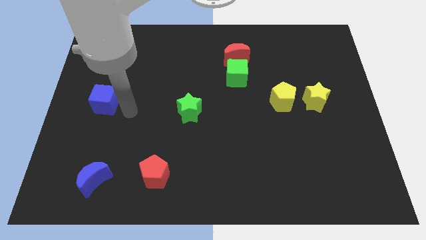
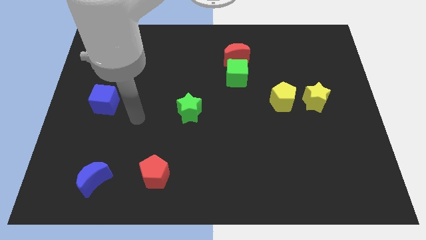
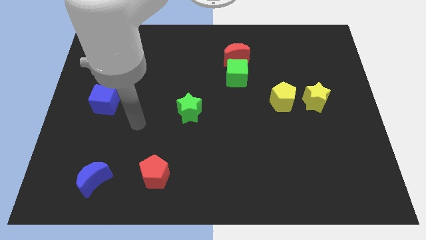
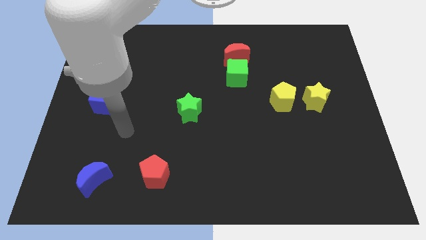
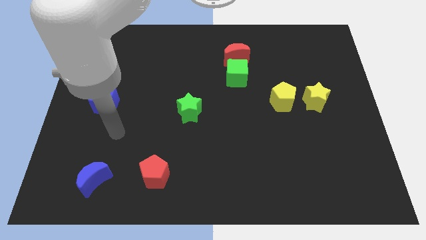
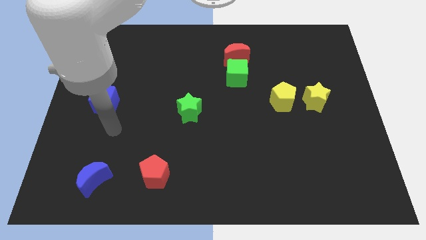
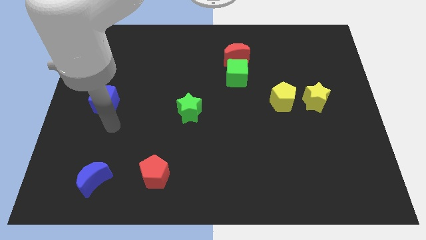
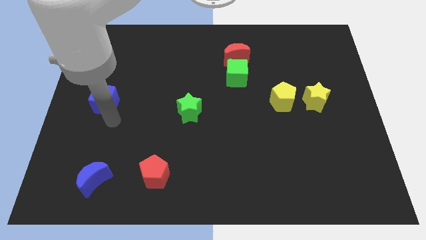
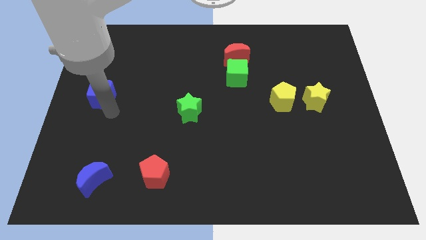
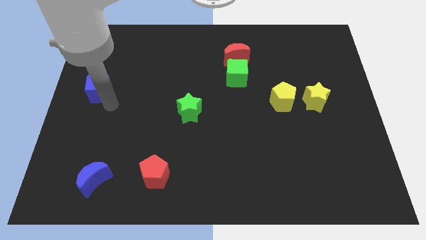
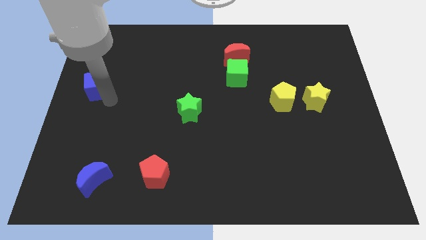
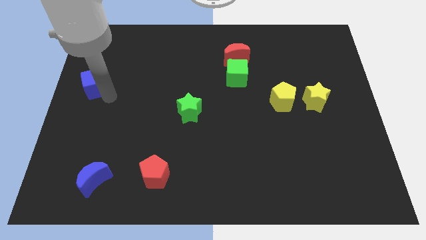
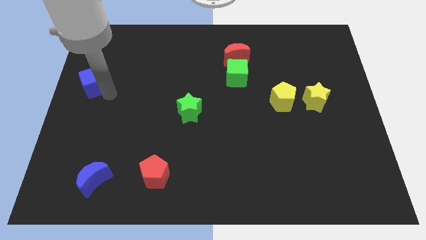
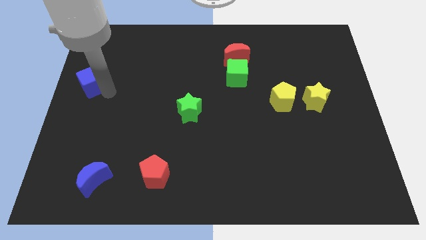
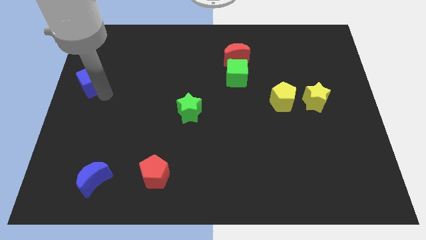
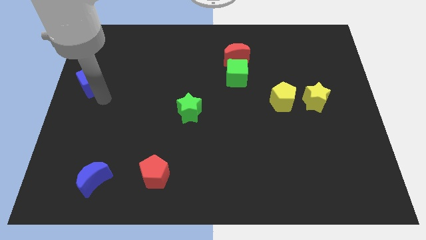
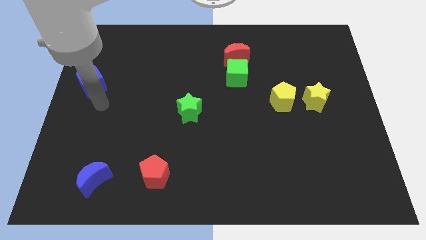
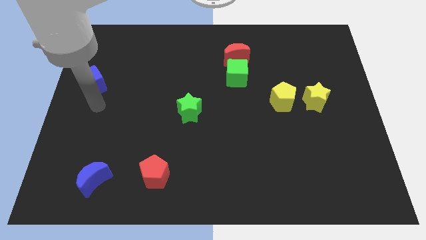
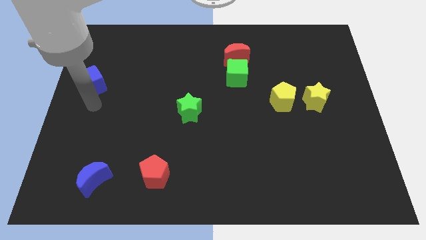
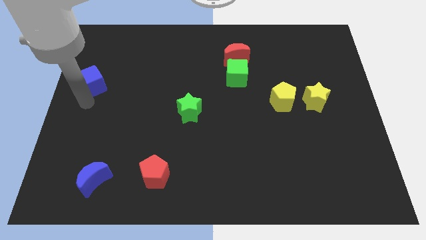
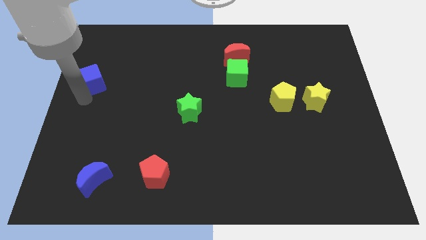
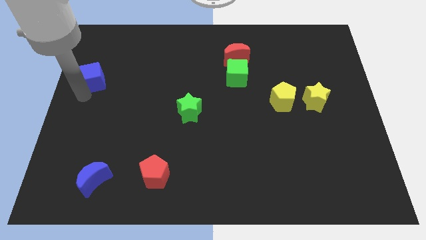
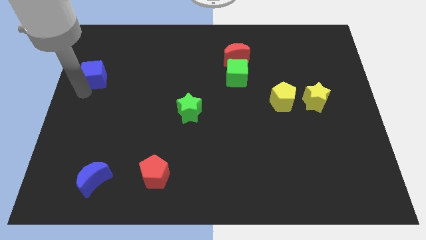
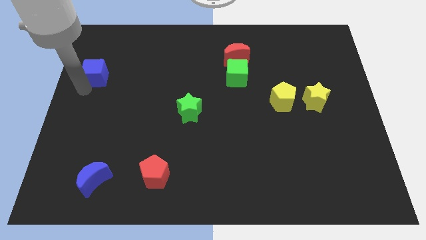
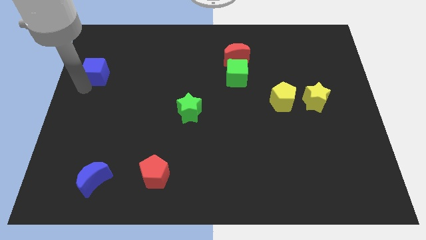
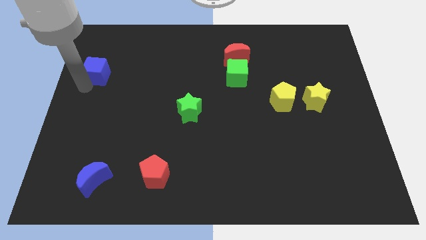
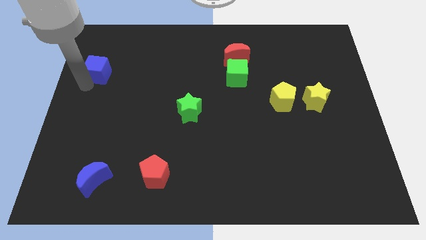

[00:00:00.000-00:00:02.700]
push the blue cube parallel to green cube

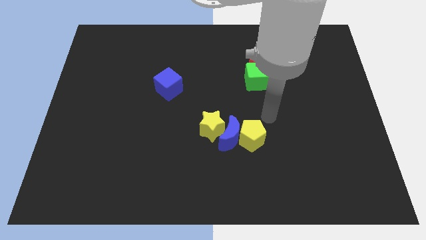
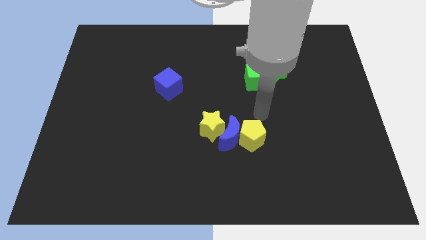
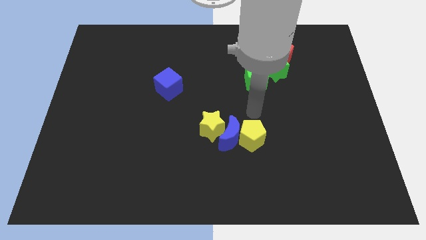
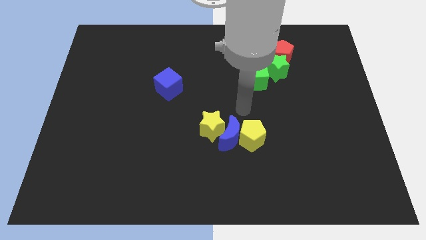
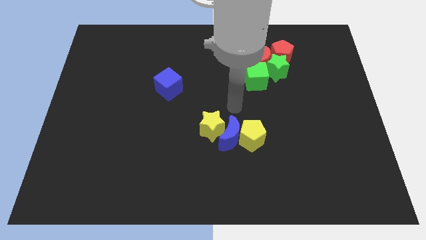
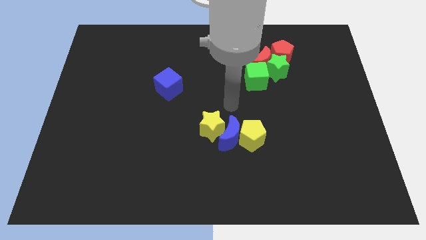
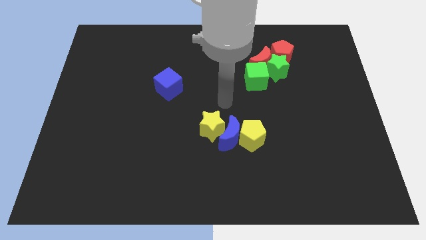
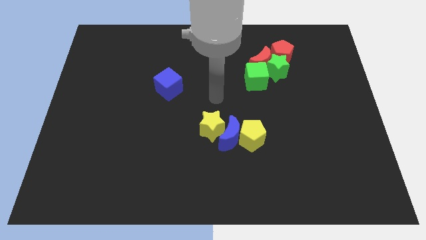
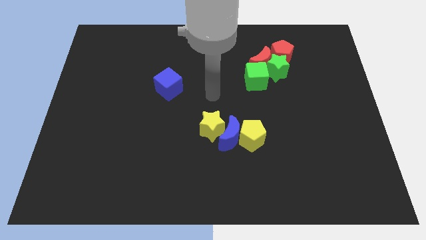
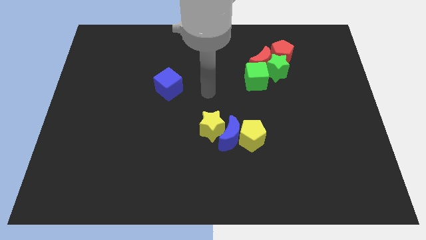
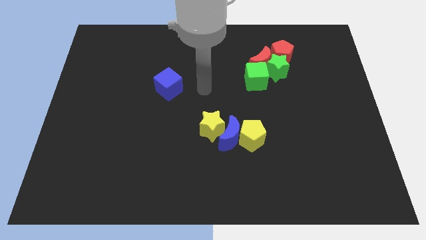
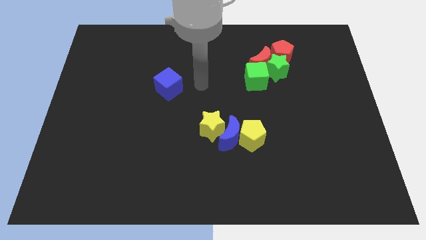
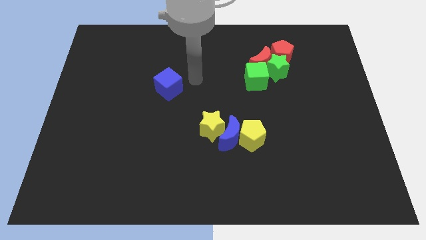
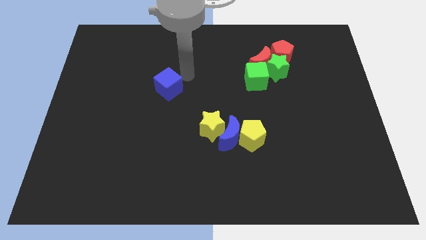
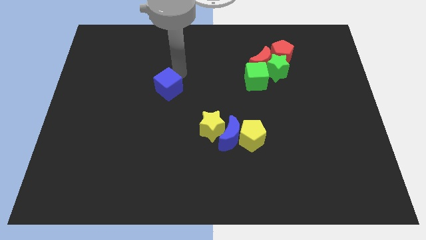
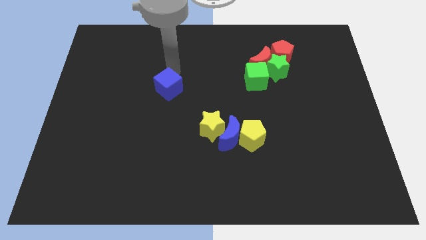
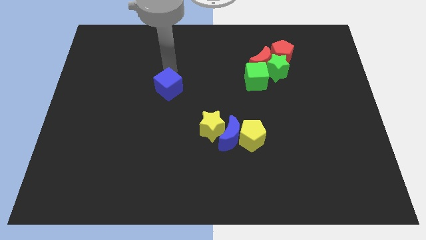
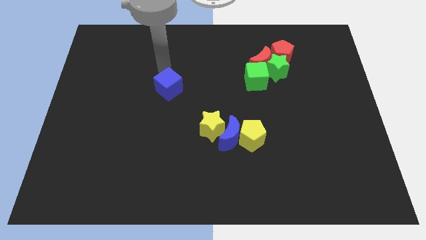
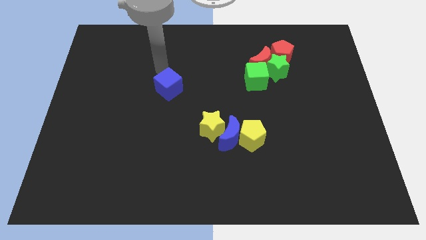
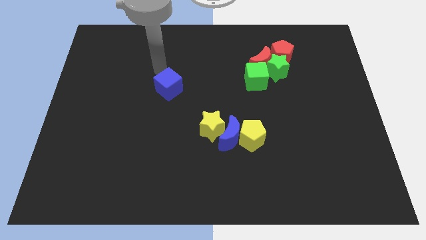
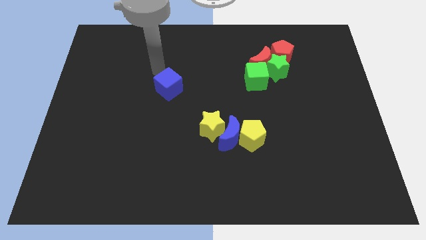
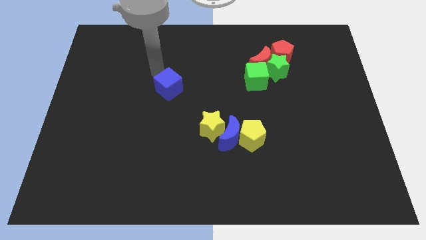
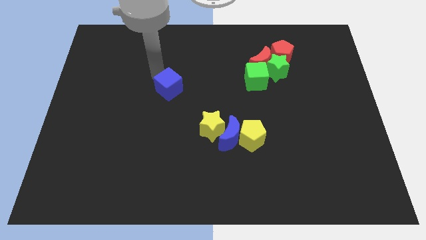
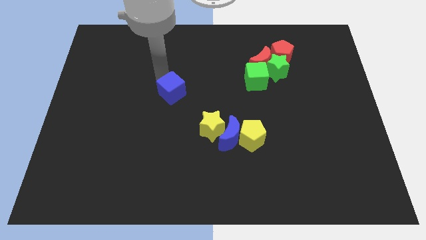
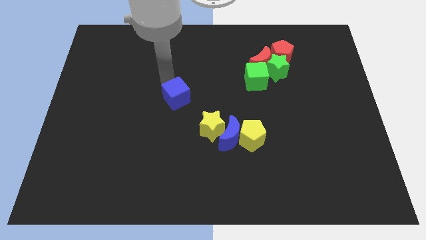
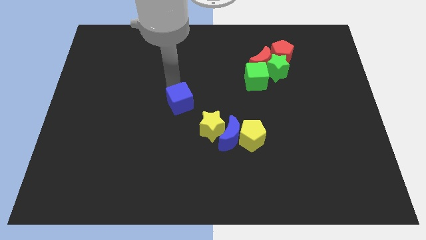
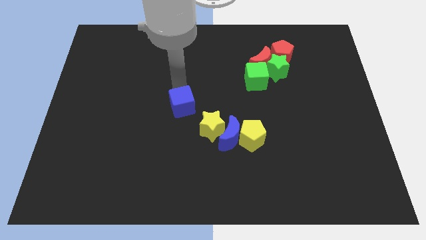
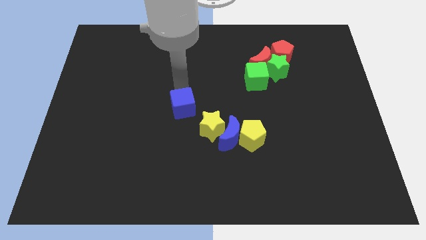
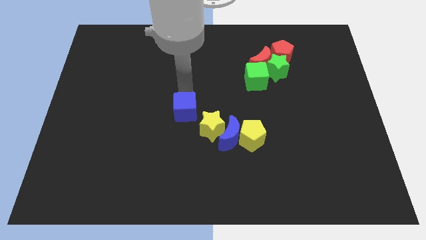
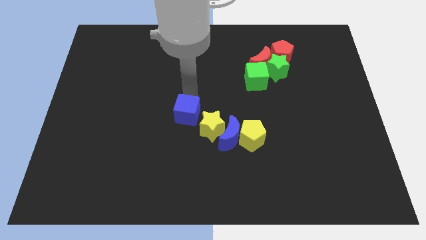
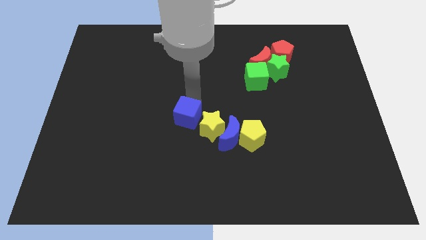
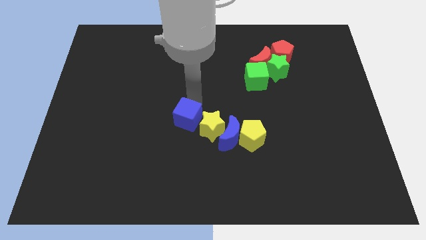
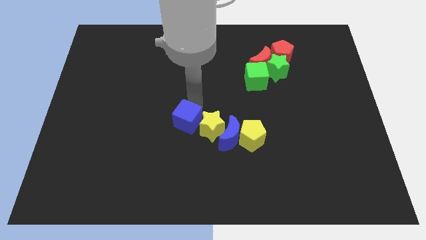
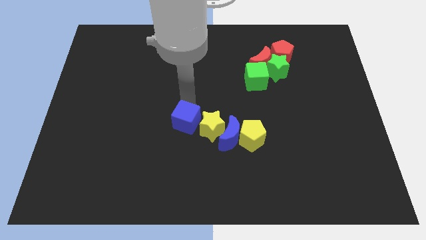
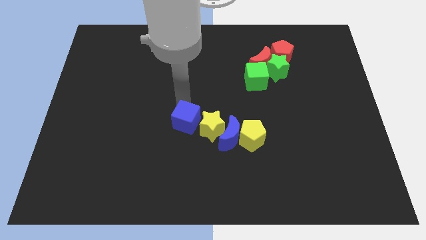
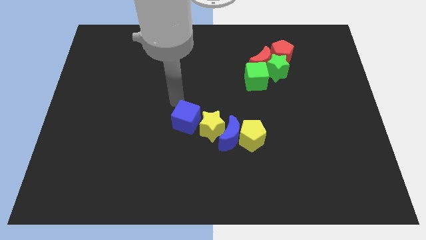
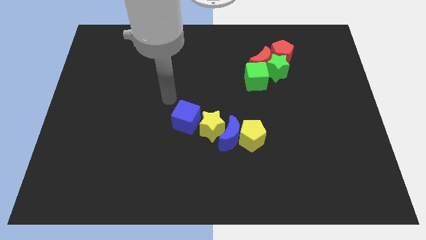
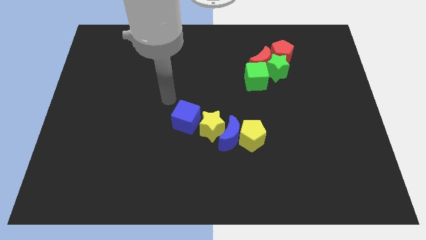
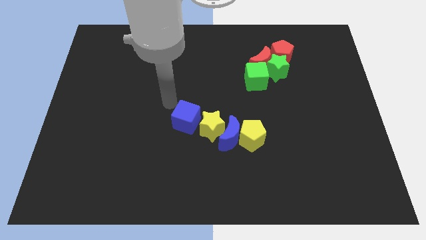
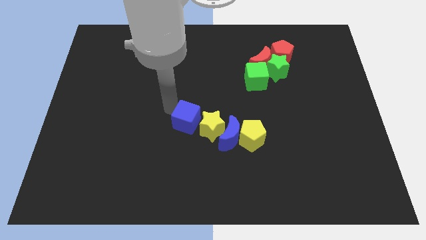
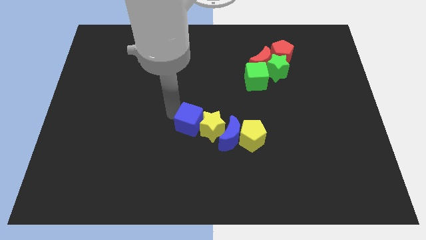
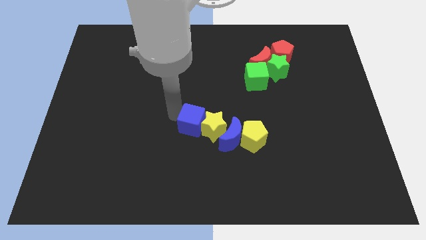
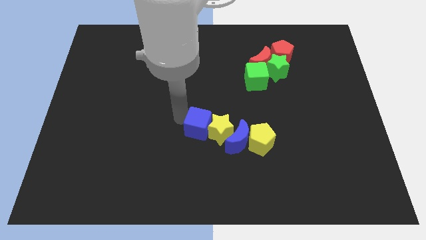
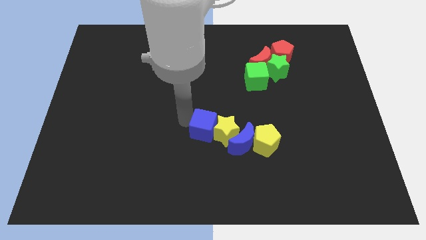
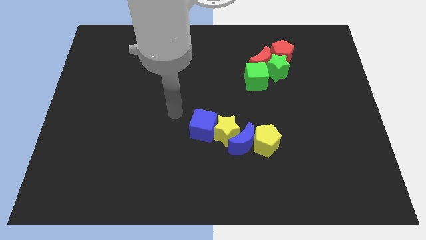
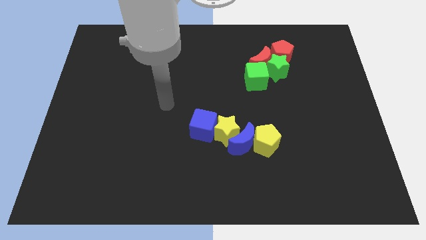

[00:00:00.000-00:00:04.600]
push the blue cube in to yellow star

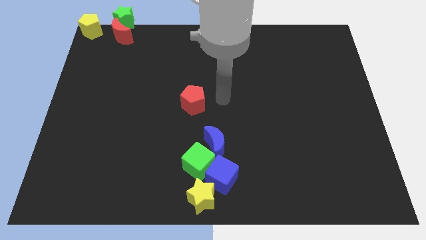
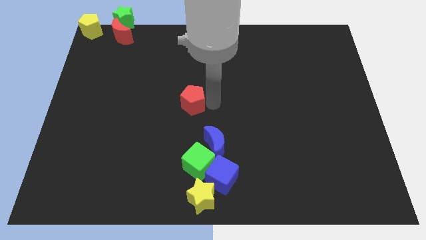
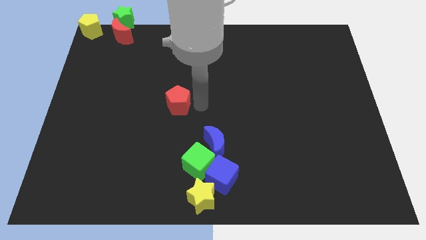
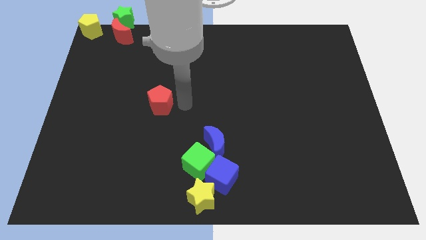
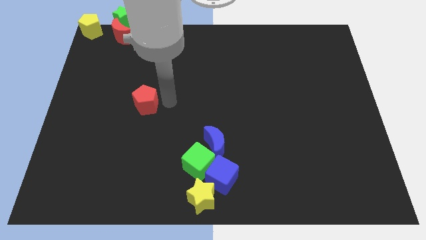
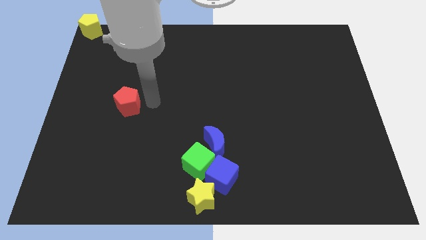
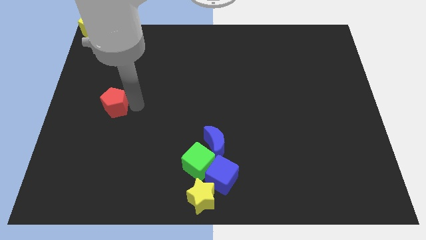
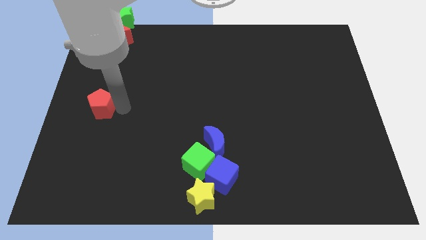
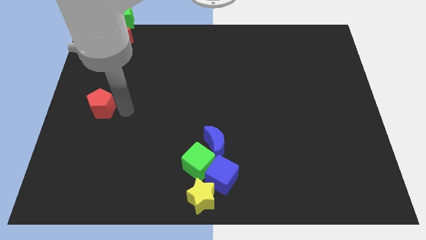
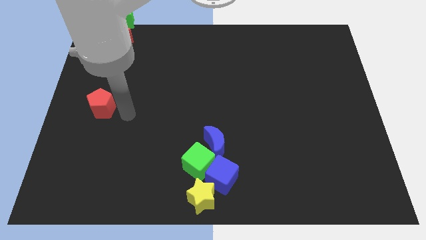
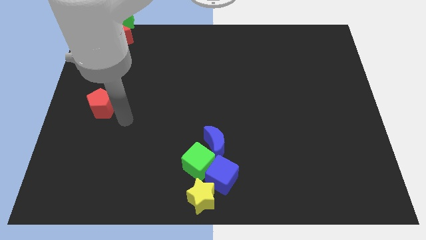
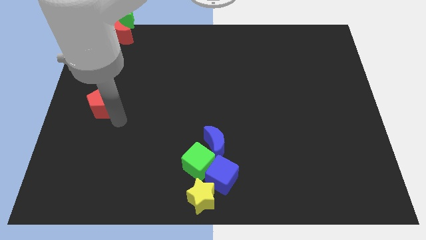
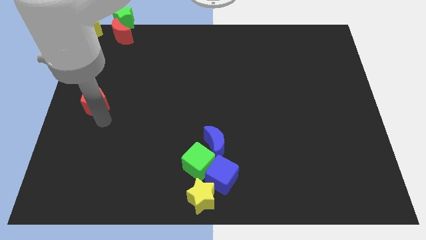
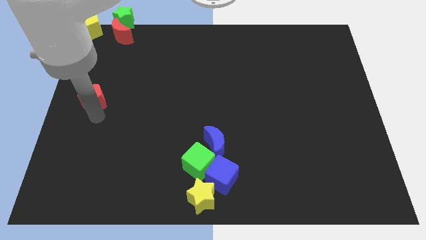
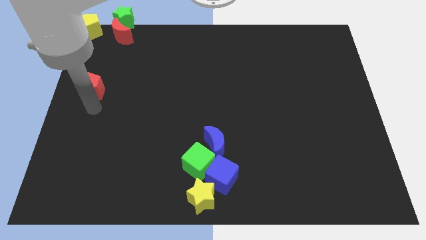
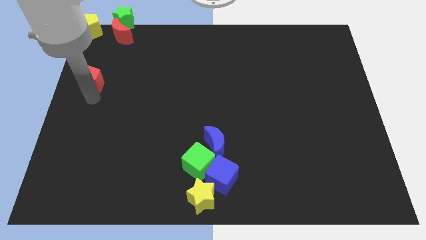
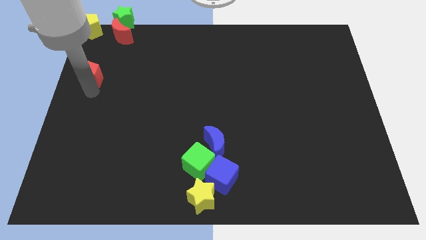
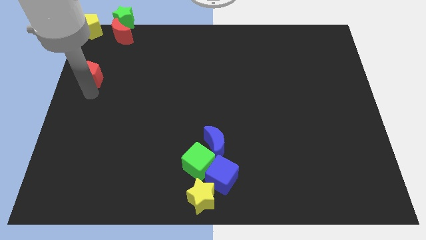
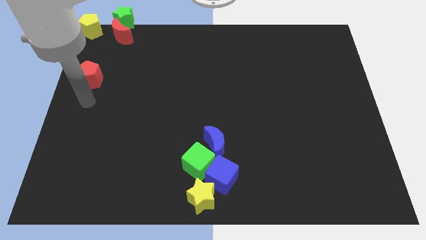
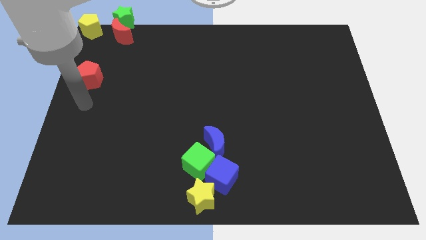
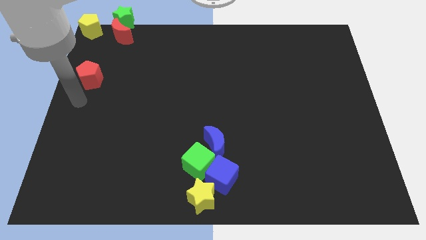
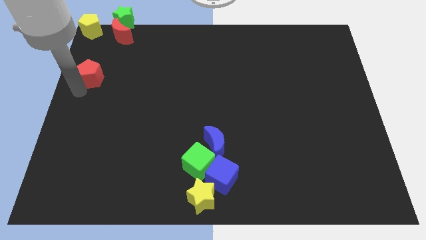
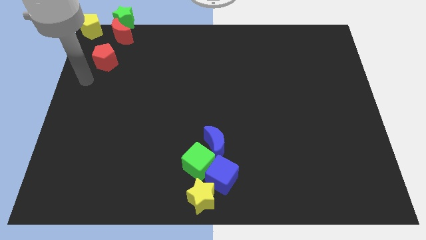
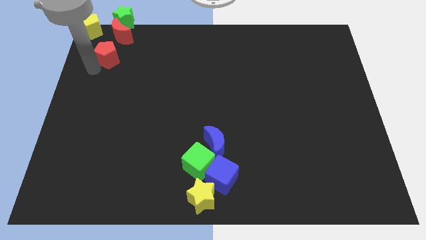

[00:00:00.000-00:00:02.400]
push the red pentagon to the bottom left of the red crescent
